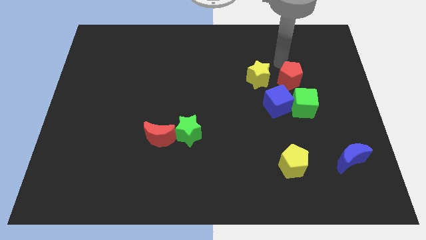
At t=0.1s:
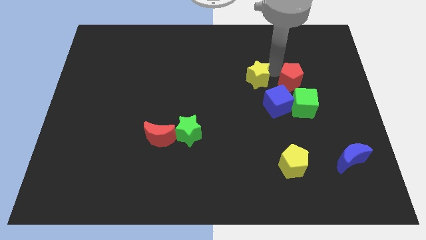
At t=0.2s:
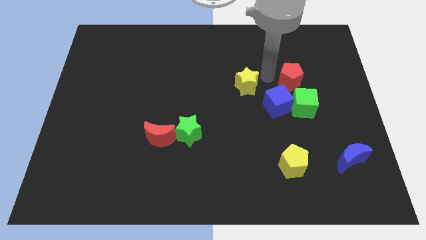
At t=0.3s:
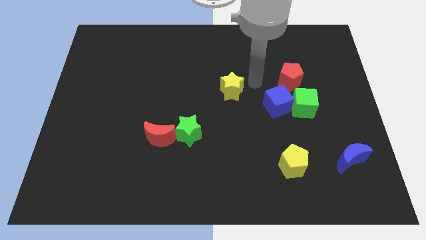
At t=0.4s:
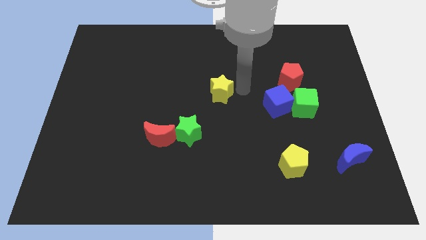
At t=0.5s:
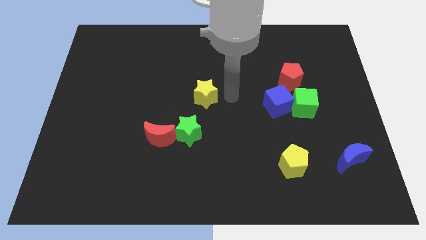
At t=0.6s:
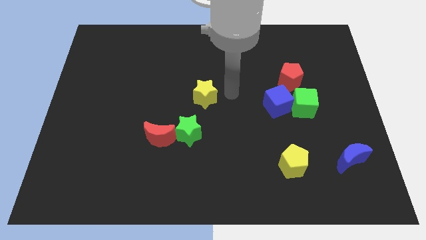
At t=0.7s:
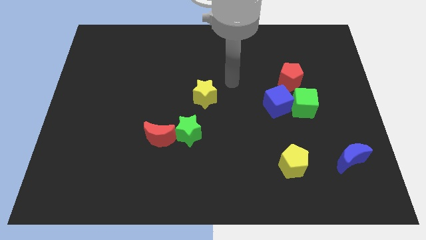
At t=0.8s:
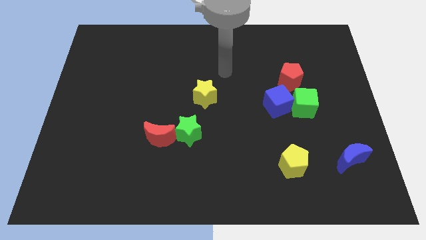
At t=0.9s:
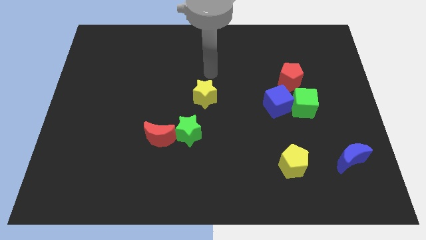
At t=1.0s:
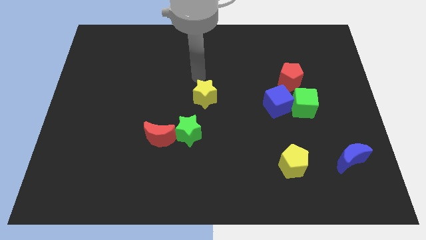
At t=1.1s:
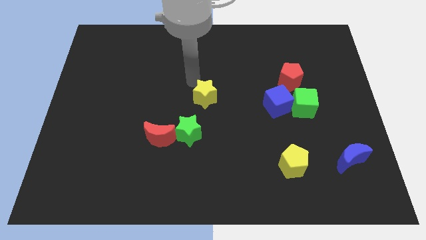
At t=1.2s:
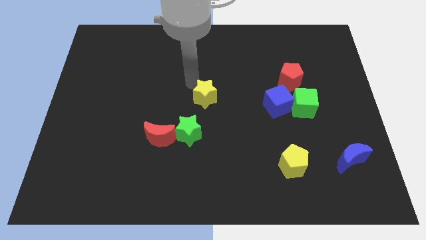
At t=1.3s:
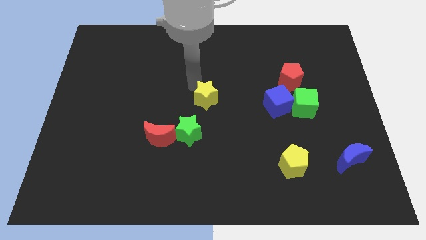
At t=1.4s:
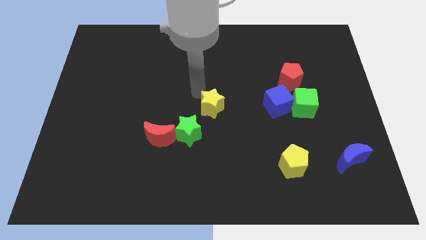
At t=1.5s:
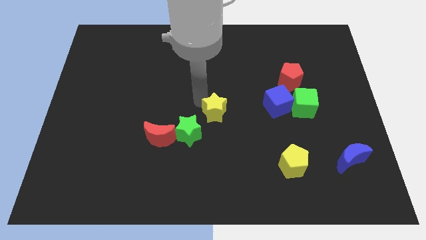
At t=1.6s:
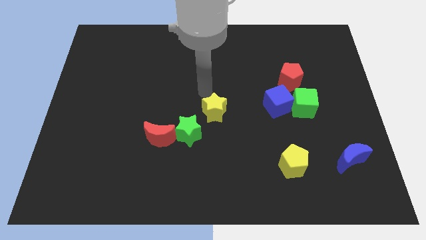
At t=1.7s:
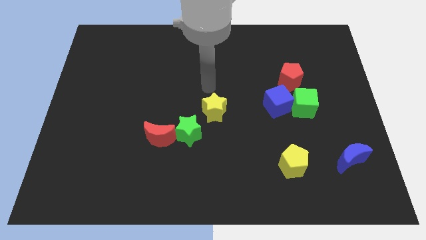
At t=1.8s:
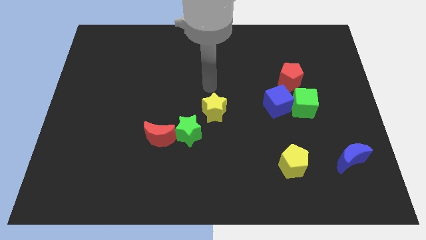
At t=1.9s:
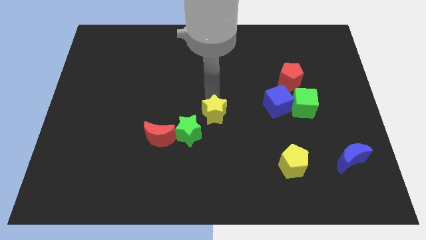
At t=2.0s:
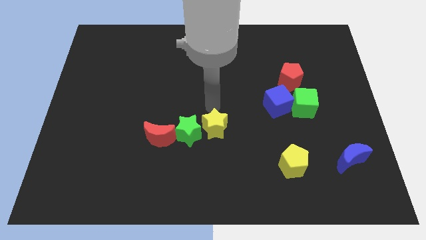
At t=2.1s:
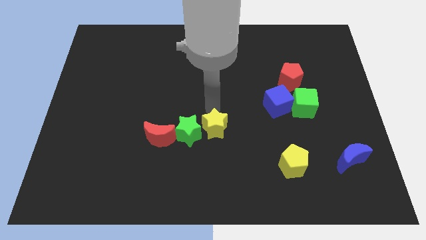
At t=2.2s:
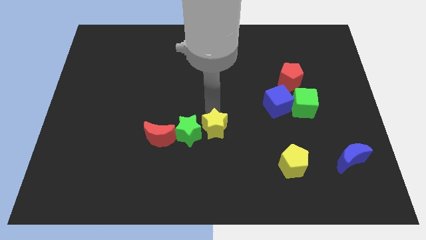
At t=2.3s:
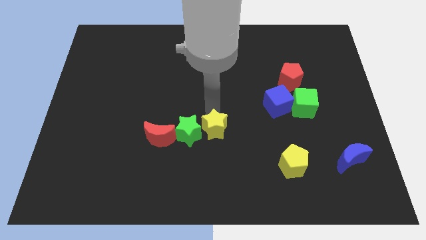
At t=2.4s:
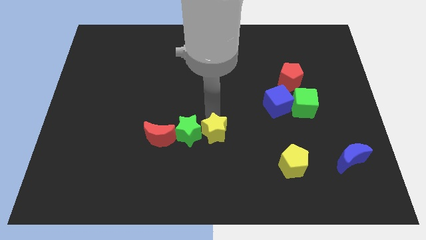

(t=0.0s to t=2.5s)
place the yellow star at the center of the board

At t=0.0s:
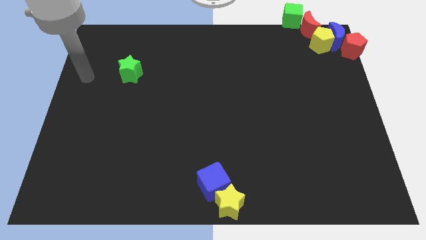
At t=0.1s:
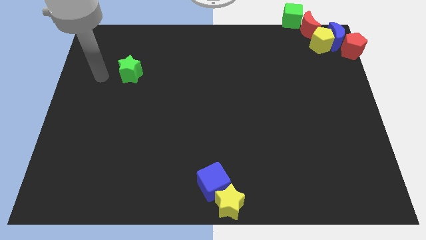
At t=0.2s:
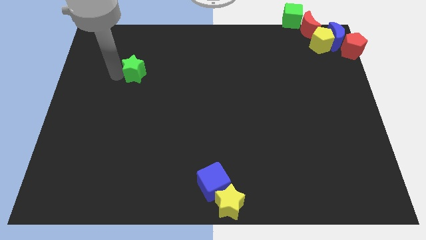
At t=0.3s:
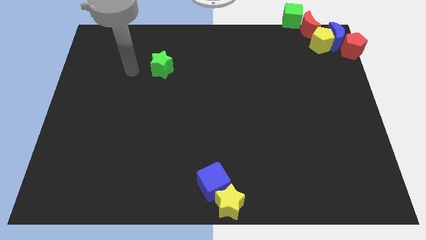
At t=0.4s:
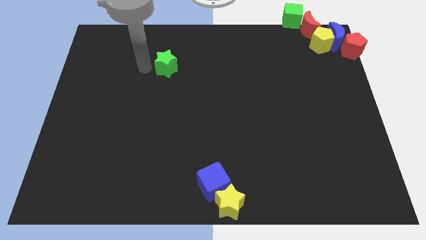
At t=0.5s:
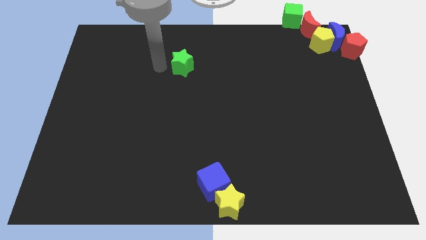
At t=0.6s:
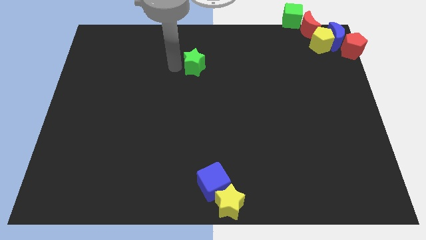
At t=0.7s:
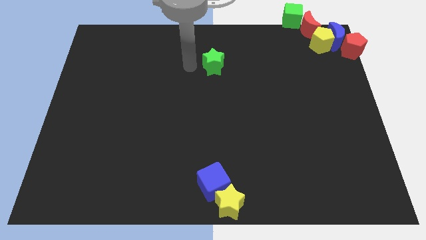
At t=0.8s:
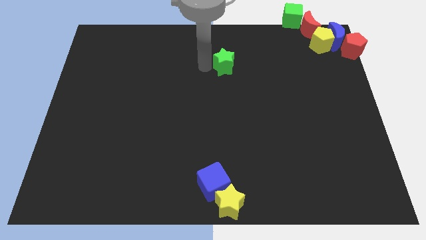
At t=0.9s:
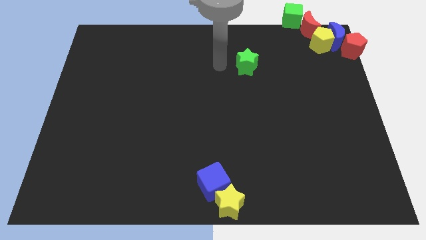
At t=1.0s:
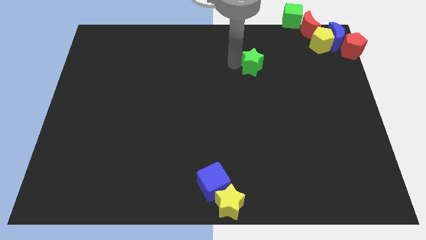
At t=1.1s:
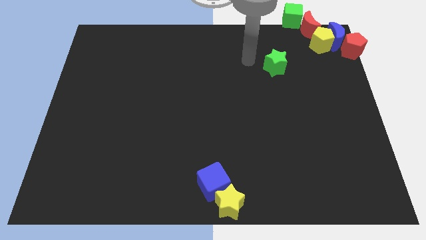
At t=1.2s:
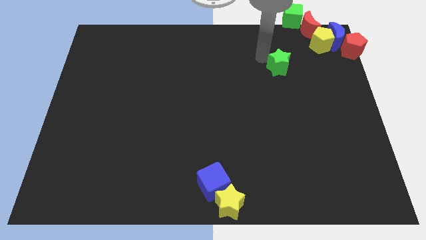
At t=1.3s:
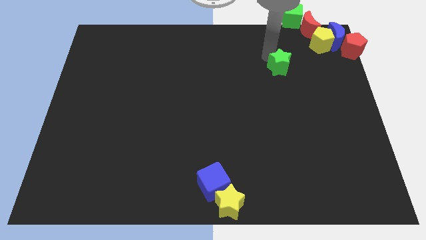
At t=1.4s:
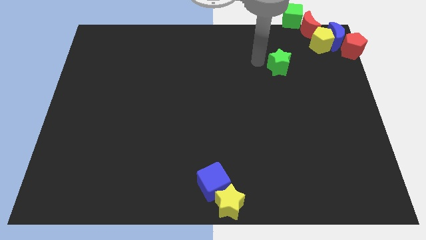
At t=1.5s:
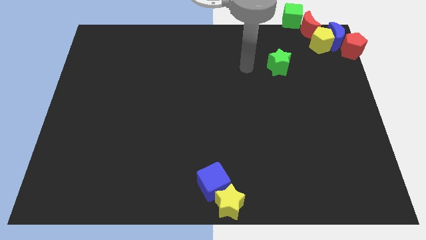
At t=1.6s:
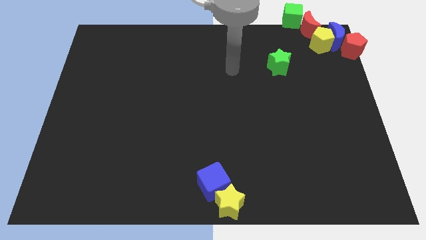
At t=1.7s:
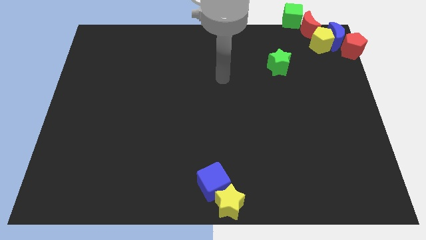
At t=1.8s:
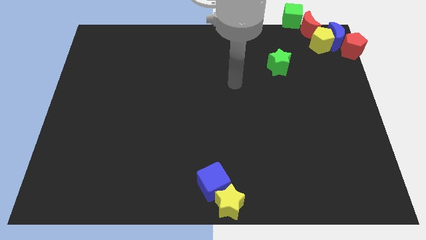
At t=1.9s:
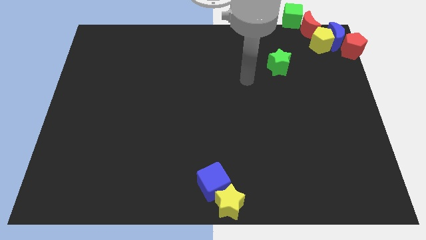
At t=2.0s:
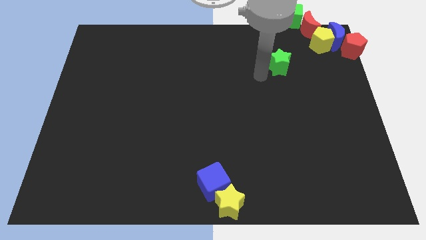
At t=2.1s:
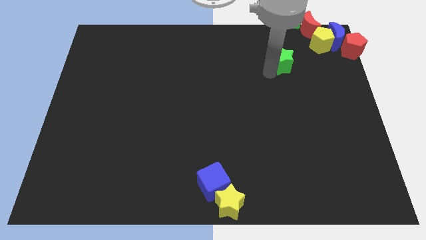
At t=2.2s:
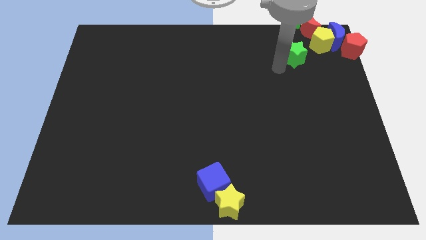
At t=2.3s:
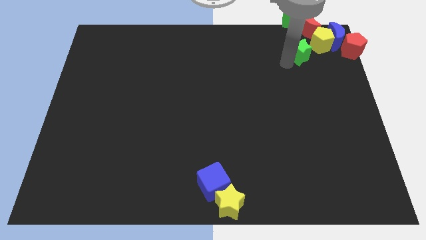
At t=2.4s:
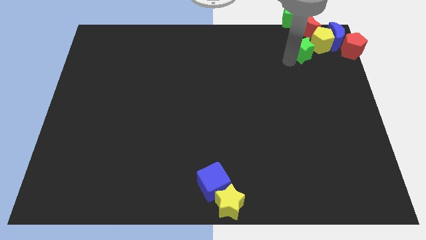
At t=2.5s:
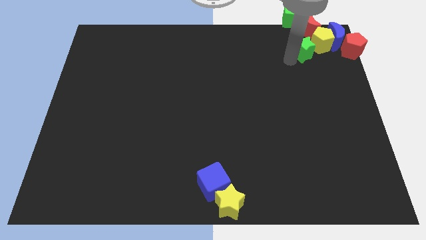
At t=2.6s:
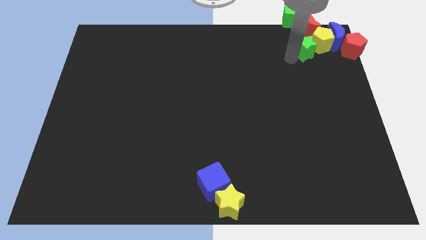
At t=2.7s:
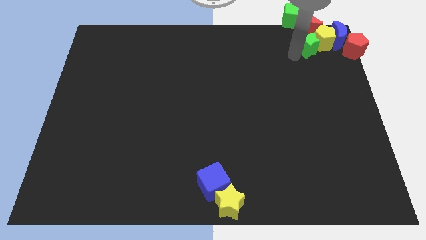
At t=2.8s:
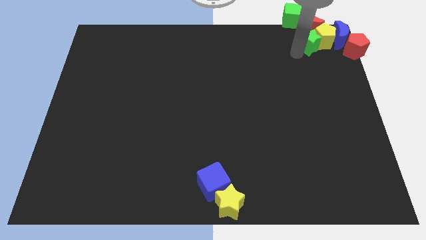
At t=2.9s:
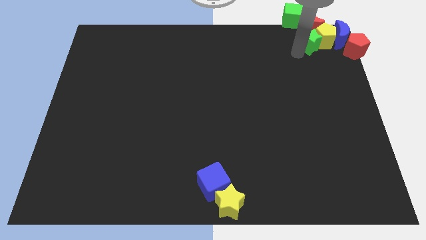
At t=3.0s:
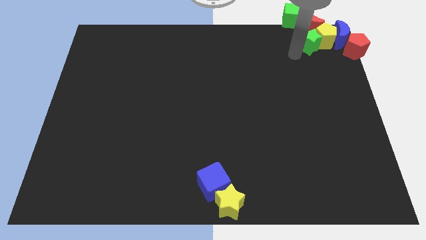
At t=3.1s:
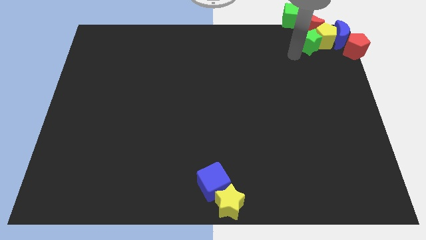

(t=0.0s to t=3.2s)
slide the green star to the top right corner

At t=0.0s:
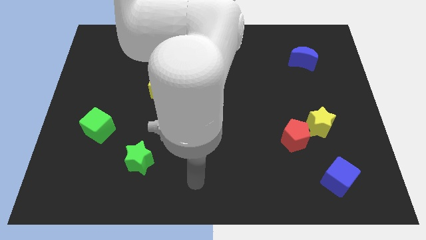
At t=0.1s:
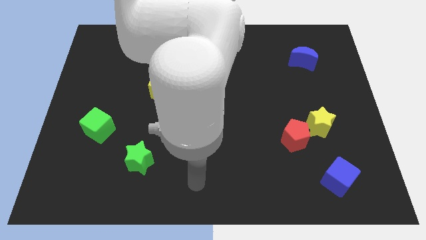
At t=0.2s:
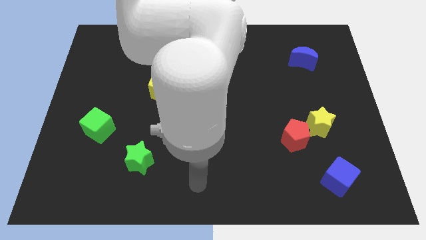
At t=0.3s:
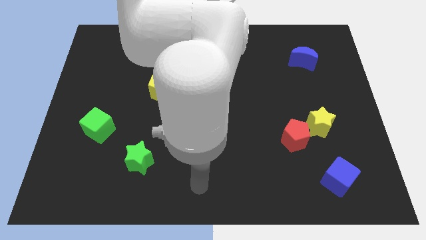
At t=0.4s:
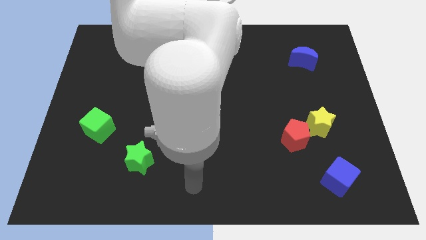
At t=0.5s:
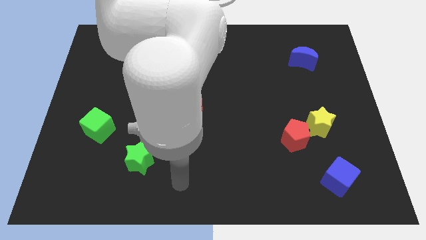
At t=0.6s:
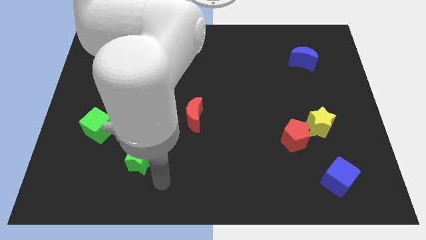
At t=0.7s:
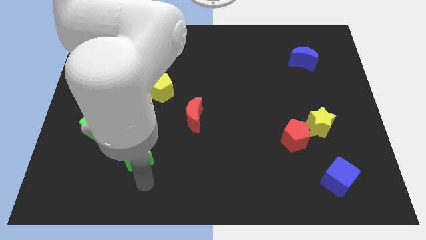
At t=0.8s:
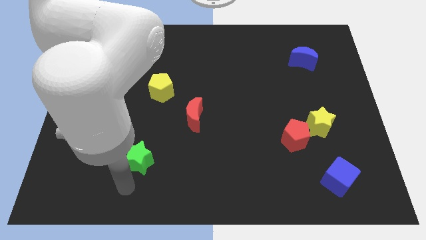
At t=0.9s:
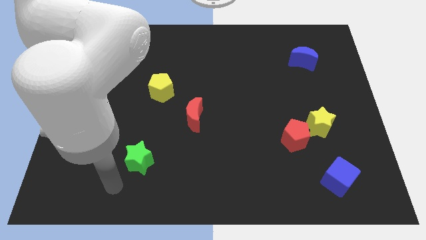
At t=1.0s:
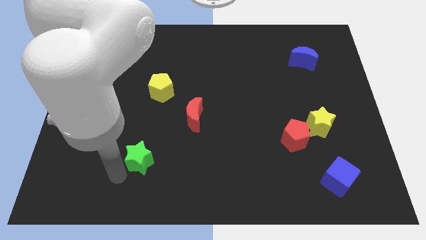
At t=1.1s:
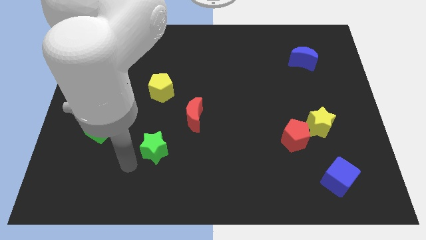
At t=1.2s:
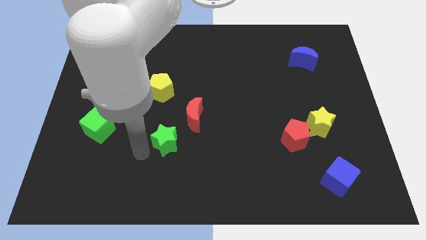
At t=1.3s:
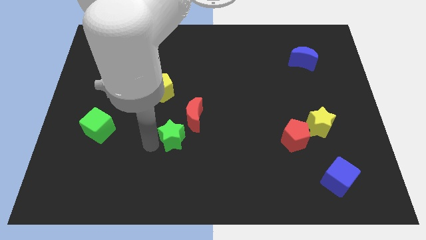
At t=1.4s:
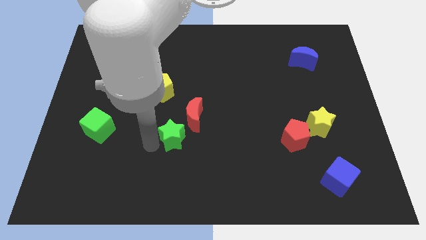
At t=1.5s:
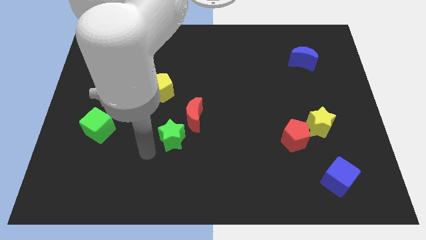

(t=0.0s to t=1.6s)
place the green star towards red crescent

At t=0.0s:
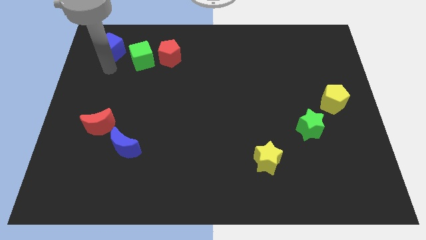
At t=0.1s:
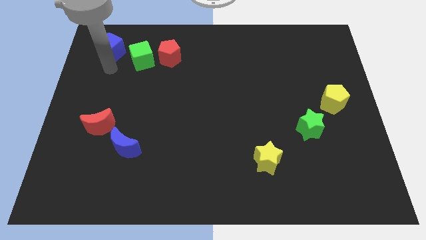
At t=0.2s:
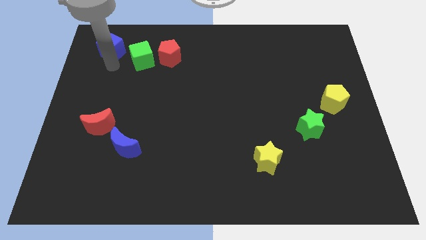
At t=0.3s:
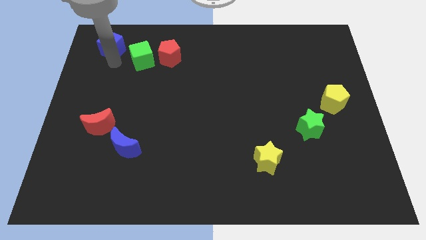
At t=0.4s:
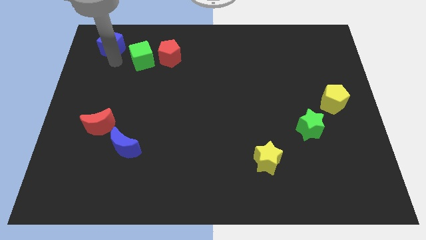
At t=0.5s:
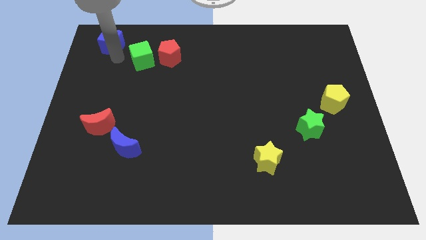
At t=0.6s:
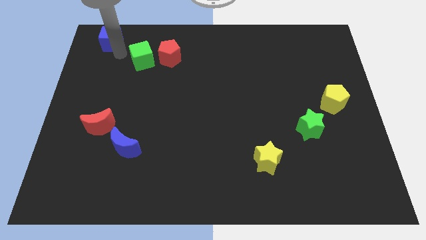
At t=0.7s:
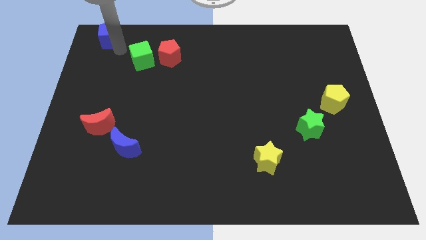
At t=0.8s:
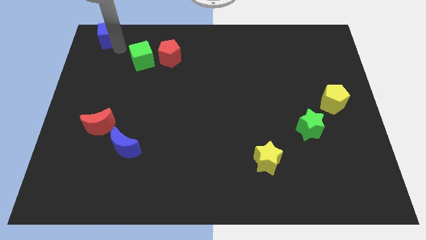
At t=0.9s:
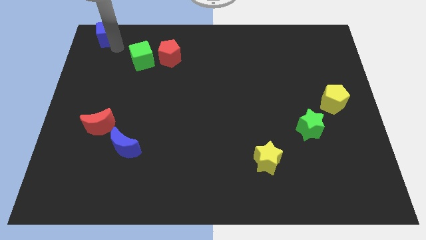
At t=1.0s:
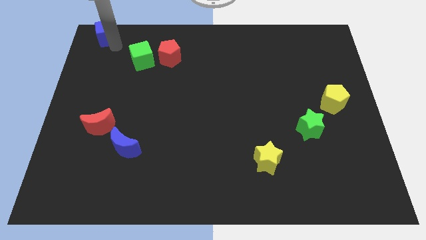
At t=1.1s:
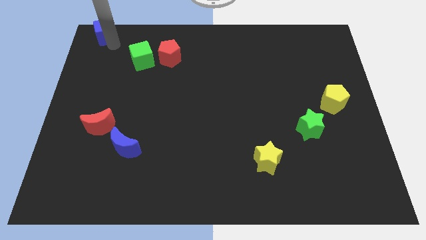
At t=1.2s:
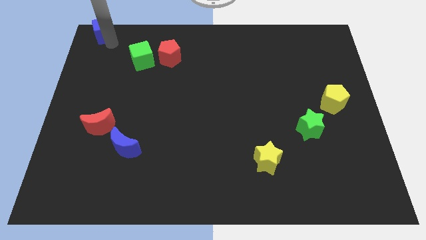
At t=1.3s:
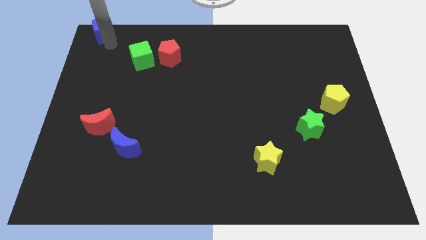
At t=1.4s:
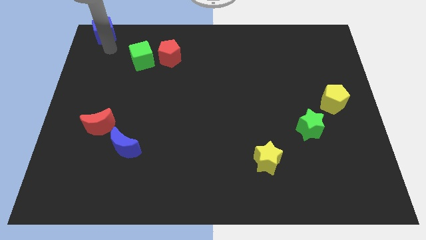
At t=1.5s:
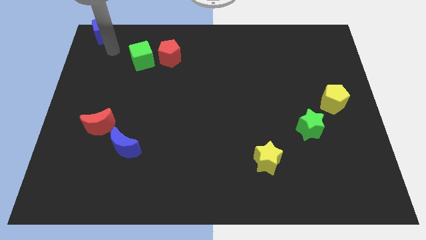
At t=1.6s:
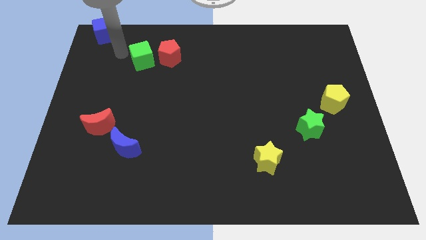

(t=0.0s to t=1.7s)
push the blue cube to the top left of the board
